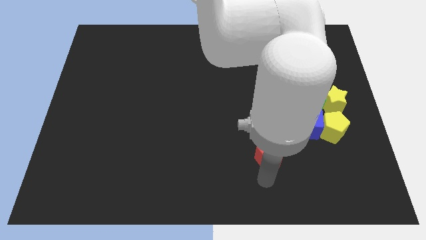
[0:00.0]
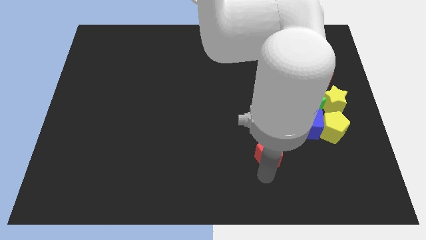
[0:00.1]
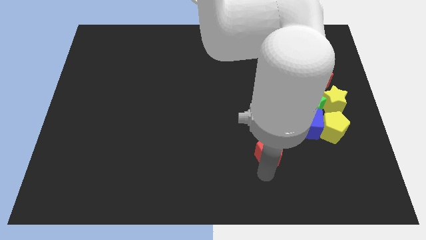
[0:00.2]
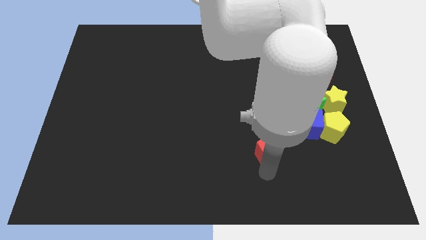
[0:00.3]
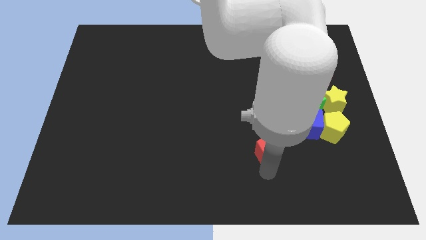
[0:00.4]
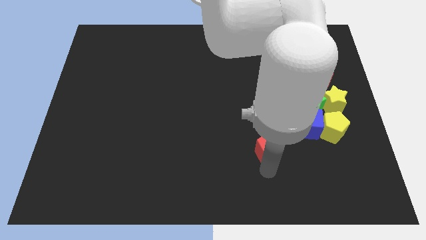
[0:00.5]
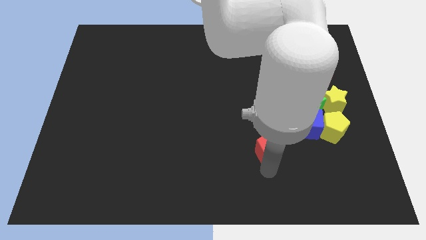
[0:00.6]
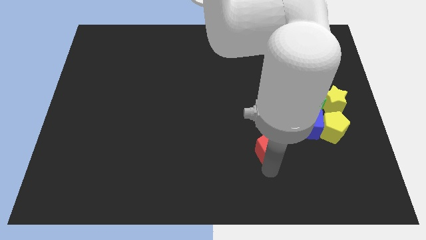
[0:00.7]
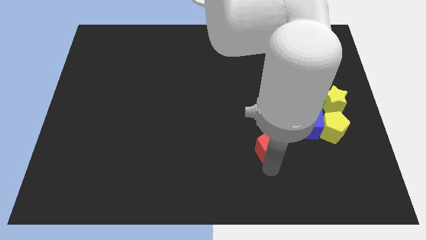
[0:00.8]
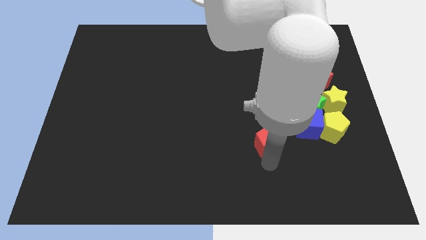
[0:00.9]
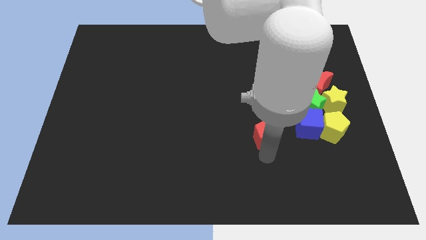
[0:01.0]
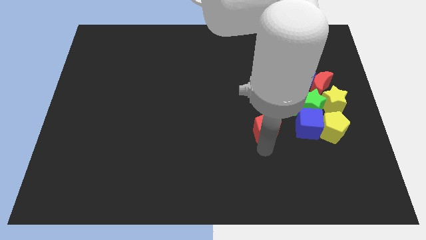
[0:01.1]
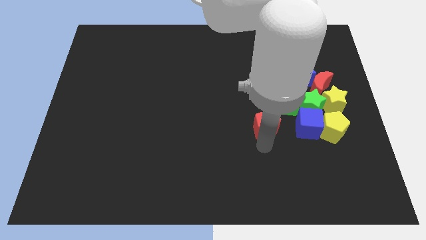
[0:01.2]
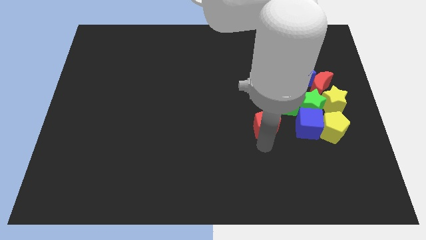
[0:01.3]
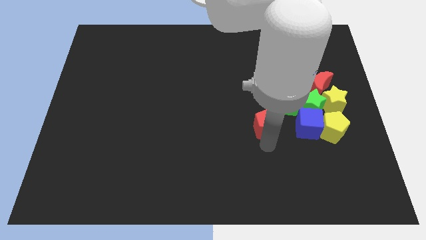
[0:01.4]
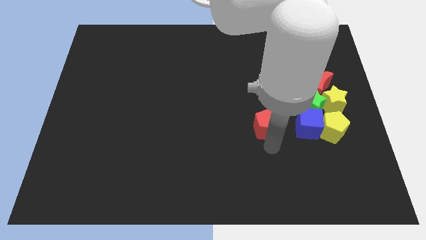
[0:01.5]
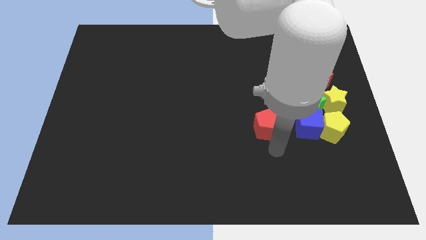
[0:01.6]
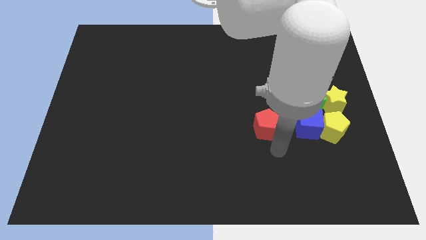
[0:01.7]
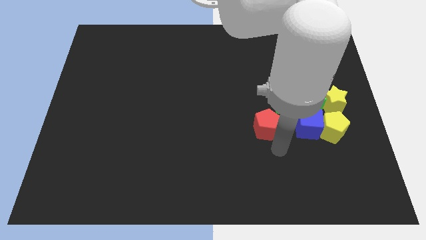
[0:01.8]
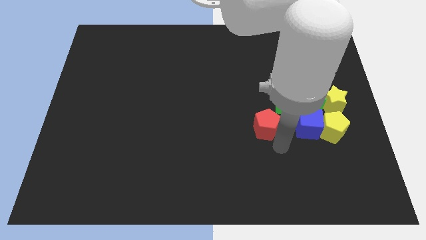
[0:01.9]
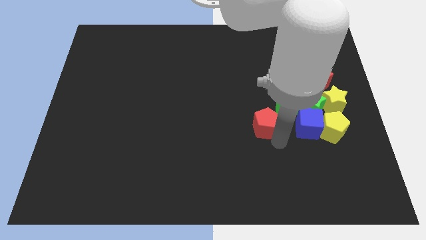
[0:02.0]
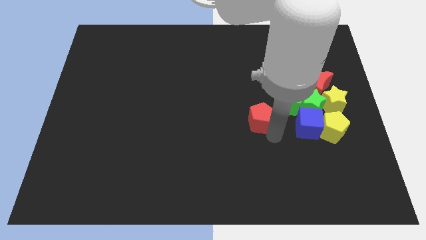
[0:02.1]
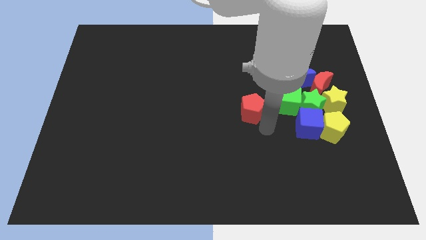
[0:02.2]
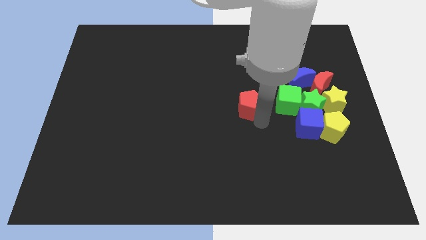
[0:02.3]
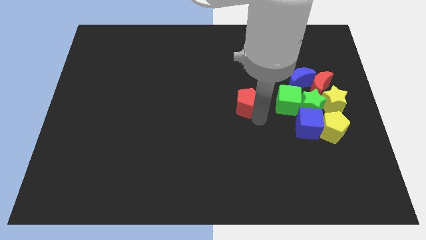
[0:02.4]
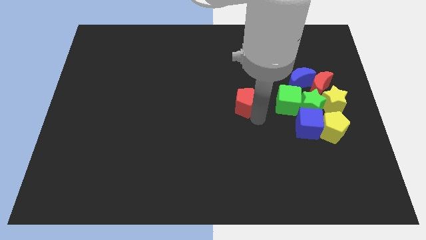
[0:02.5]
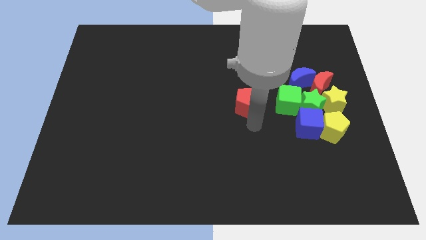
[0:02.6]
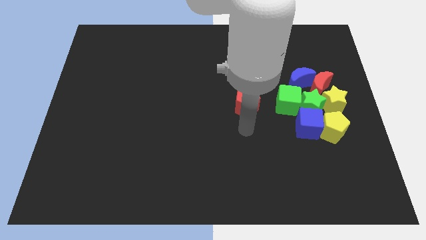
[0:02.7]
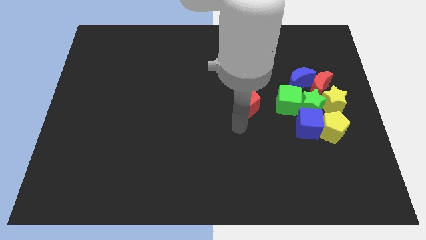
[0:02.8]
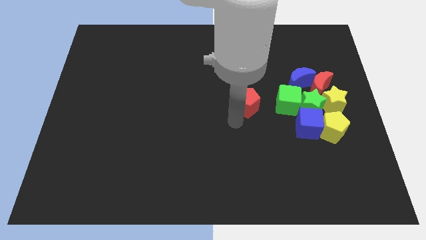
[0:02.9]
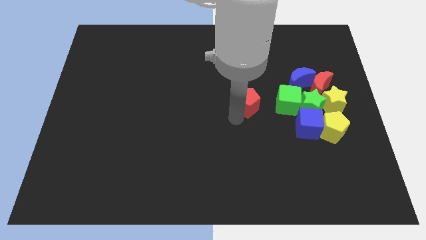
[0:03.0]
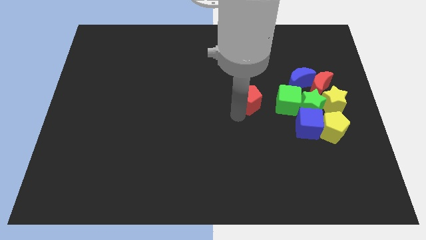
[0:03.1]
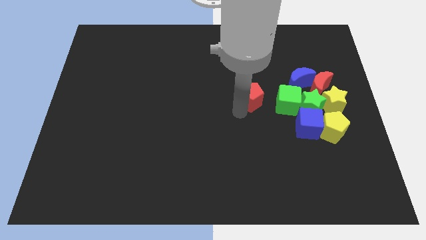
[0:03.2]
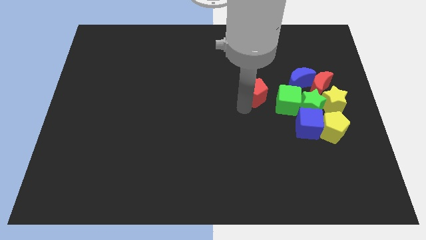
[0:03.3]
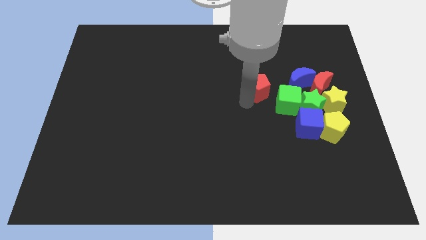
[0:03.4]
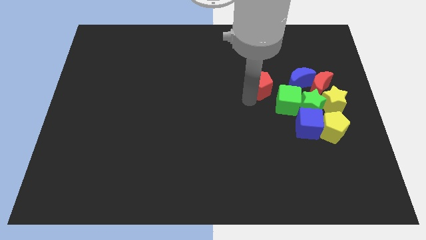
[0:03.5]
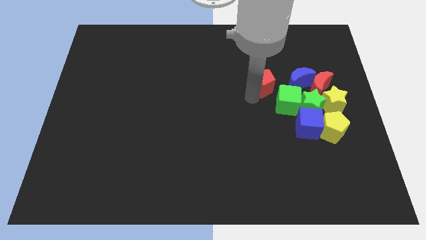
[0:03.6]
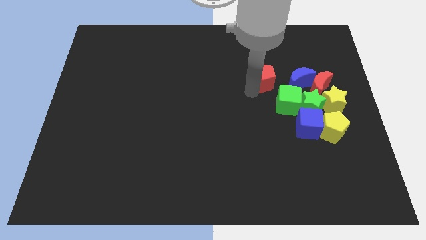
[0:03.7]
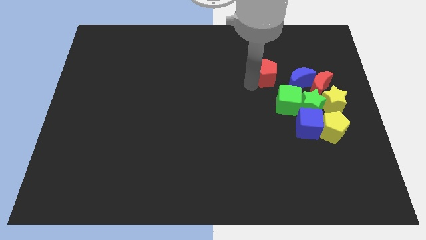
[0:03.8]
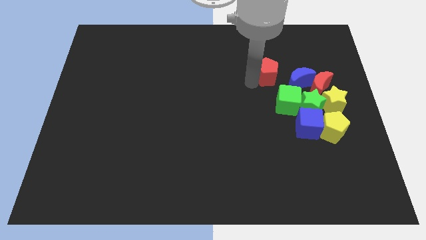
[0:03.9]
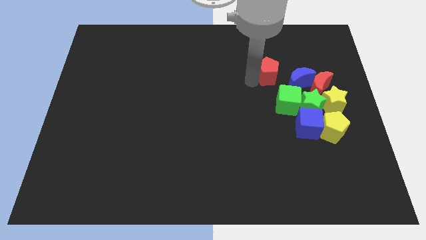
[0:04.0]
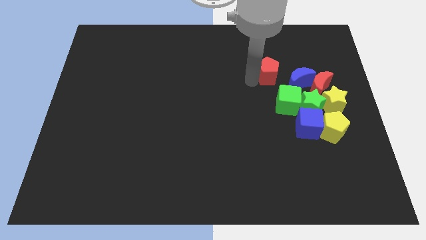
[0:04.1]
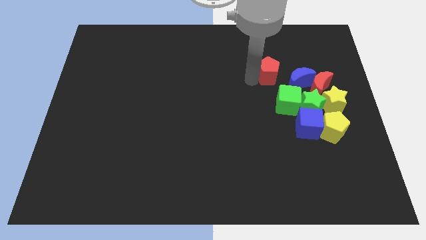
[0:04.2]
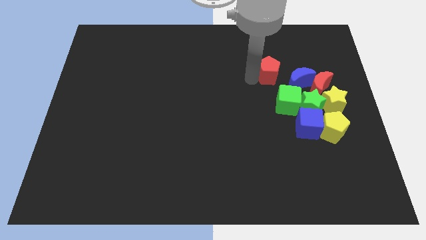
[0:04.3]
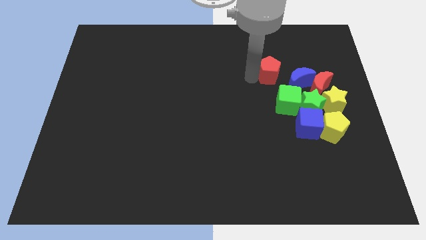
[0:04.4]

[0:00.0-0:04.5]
move the red pentagon towards the top side of the board

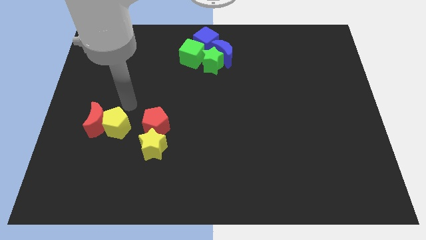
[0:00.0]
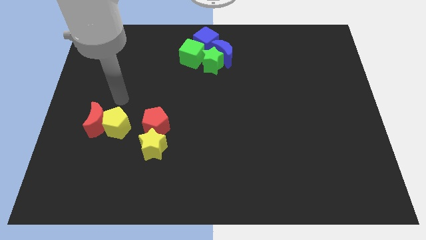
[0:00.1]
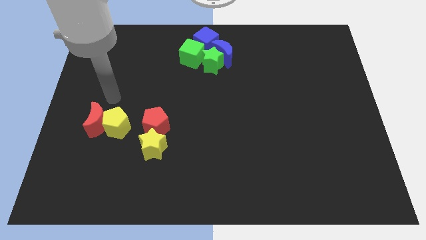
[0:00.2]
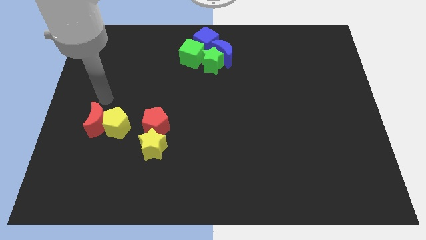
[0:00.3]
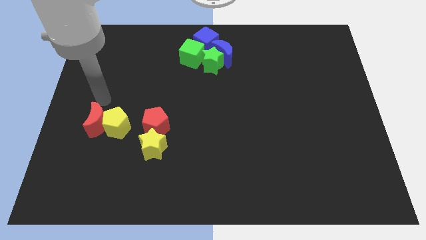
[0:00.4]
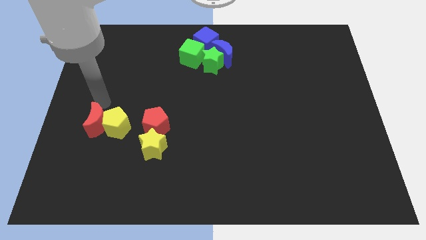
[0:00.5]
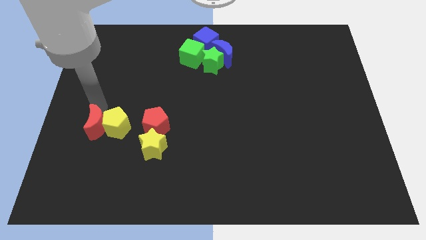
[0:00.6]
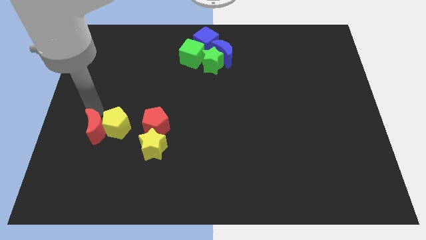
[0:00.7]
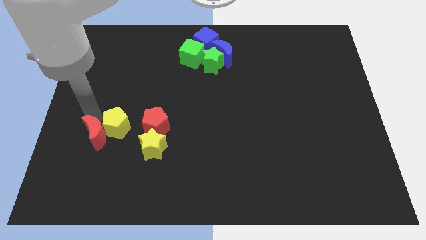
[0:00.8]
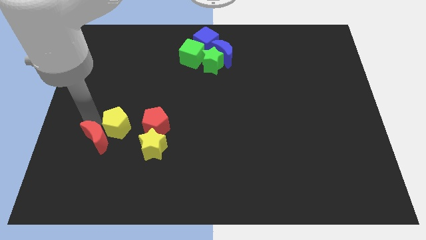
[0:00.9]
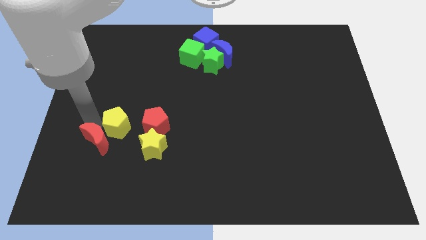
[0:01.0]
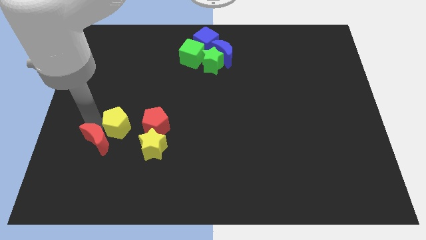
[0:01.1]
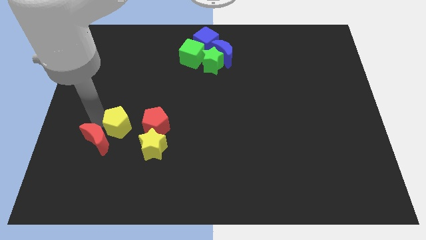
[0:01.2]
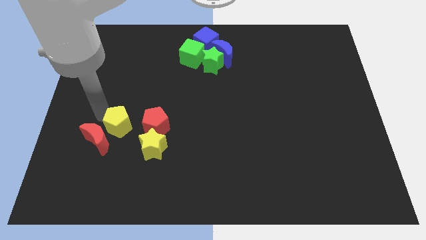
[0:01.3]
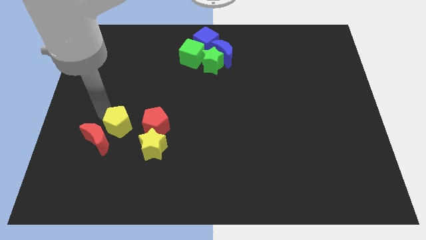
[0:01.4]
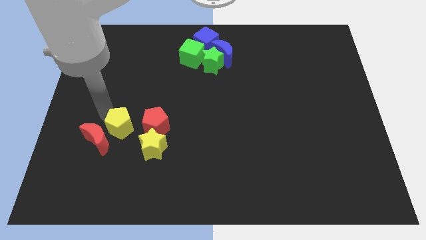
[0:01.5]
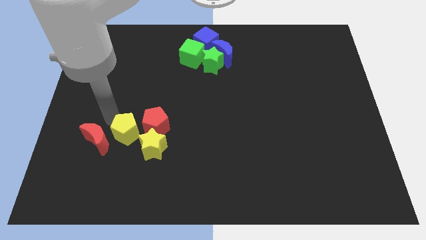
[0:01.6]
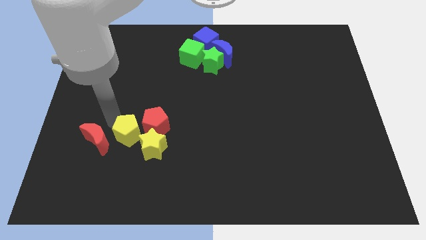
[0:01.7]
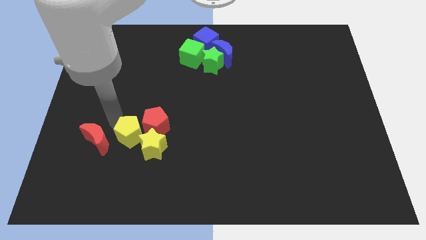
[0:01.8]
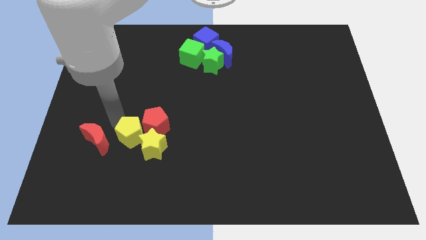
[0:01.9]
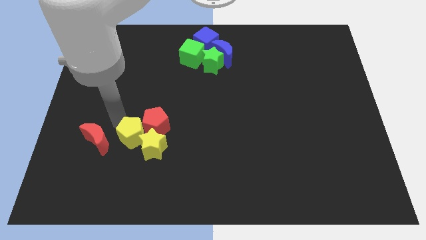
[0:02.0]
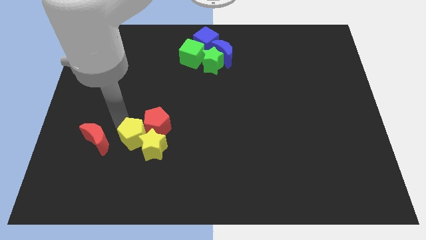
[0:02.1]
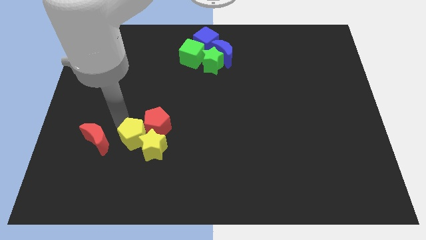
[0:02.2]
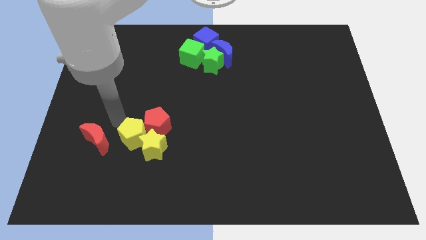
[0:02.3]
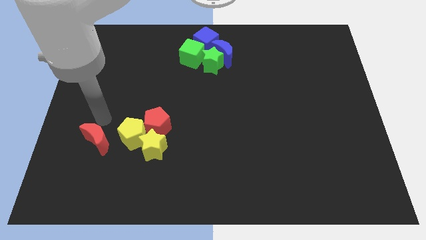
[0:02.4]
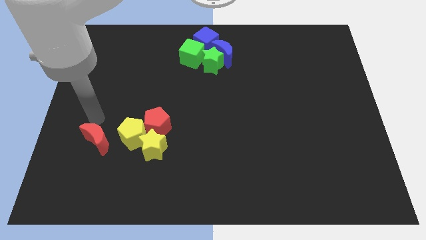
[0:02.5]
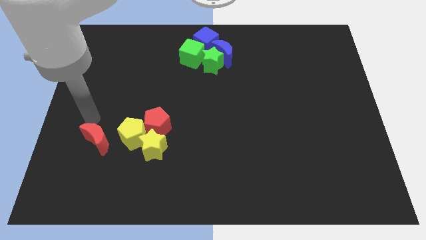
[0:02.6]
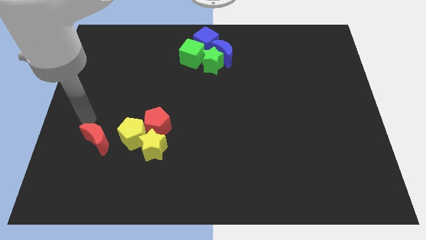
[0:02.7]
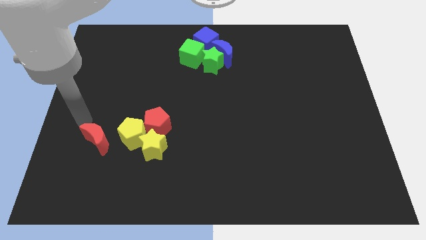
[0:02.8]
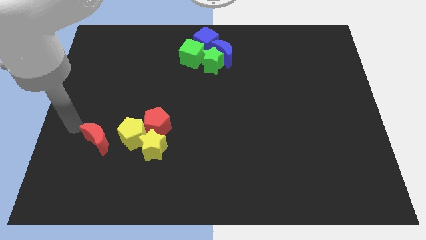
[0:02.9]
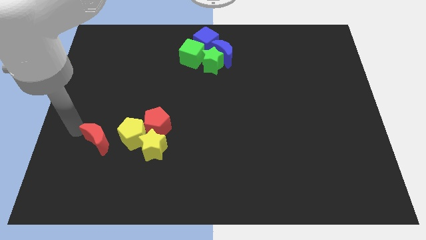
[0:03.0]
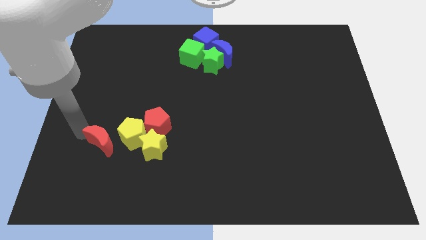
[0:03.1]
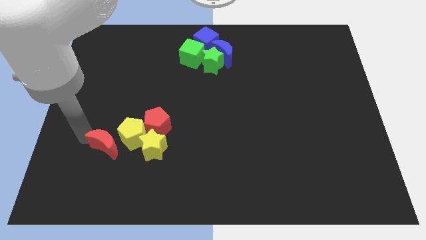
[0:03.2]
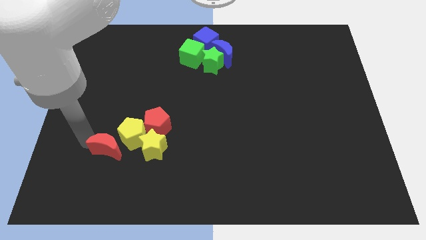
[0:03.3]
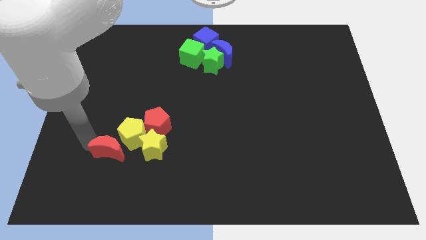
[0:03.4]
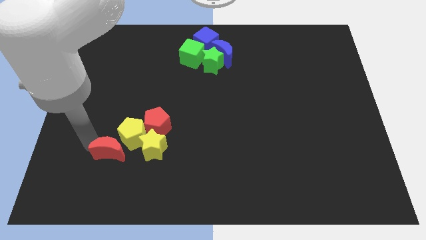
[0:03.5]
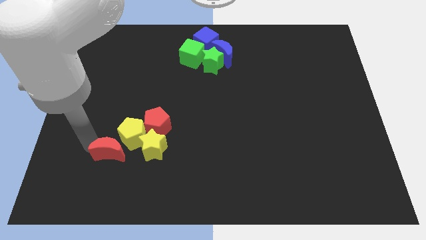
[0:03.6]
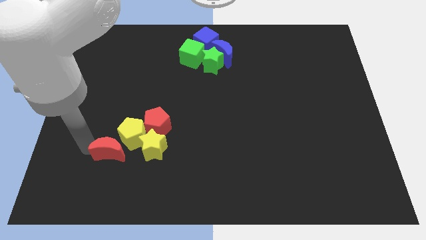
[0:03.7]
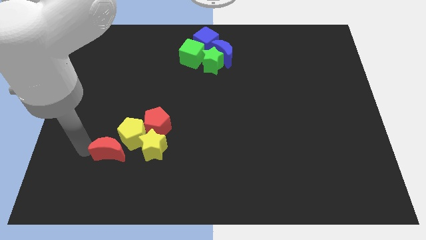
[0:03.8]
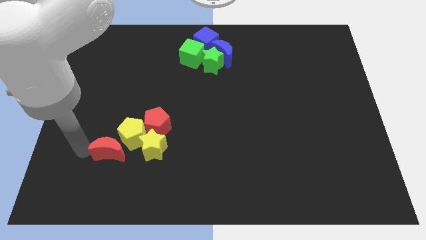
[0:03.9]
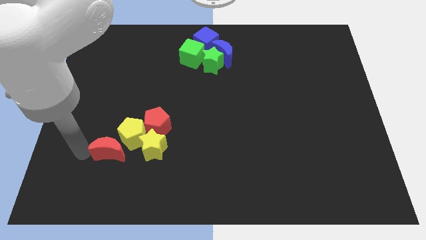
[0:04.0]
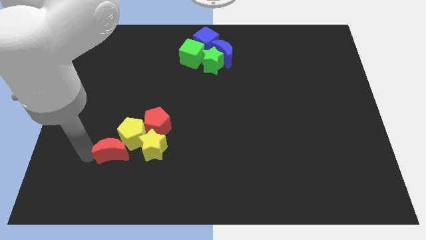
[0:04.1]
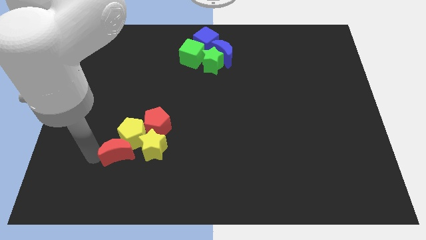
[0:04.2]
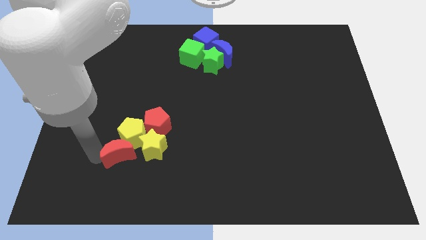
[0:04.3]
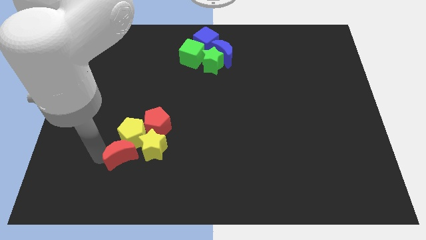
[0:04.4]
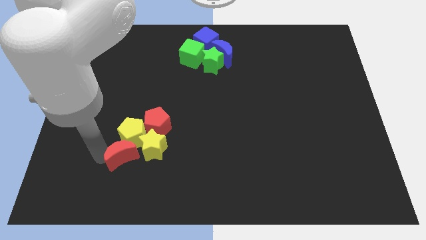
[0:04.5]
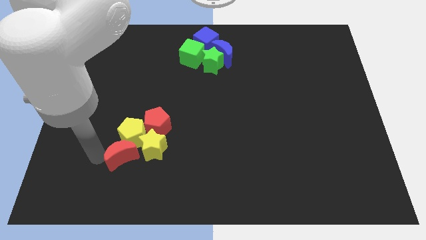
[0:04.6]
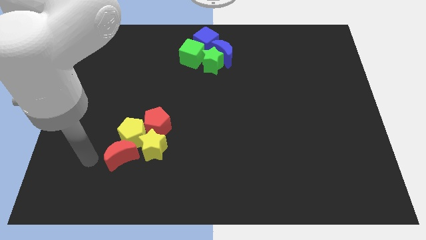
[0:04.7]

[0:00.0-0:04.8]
place the yellow pentagon and red crescent to the bottom of the red pentagon
